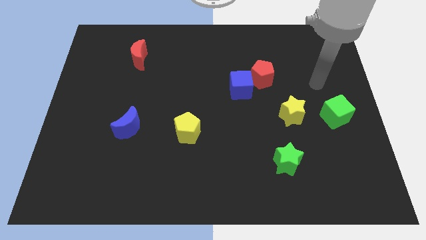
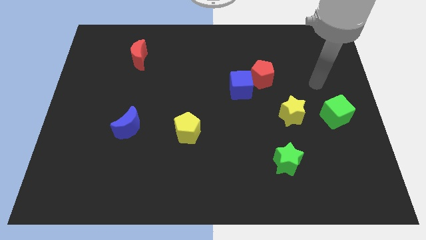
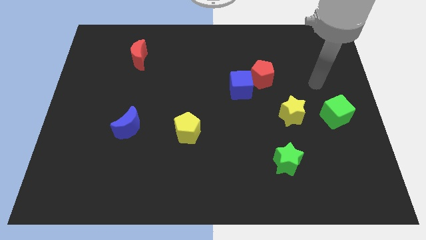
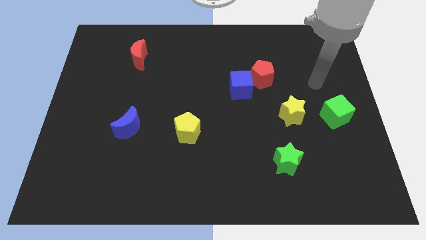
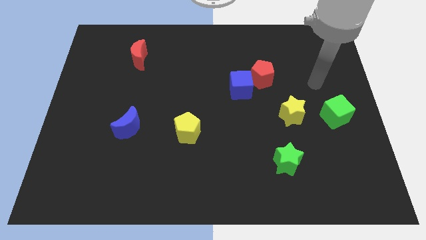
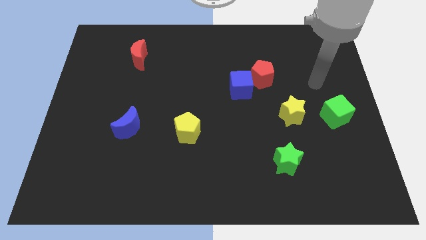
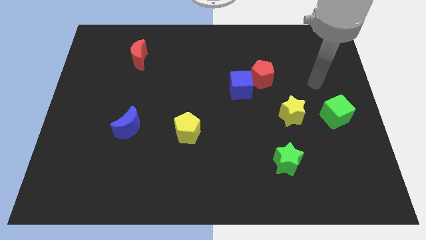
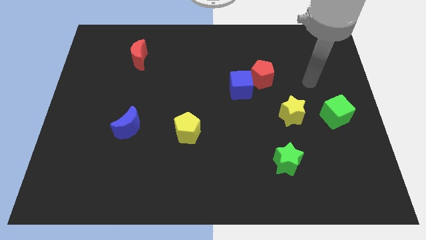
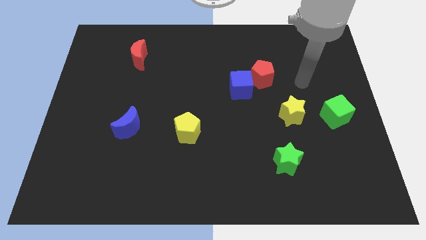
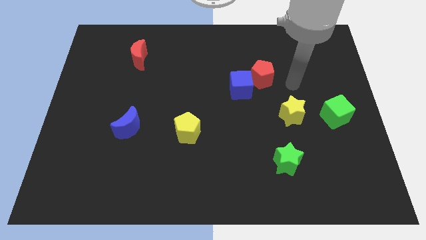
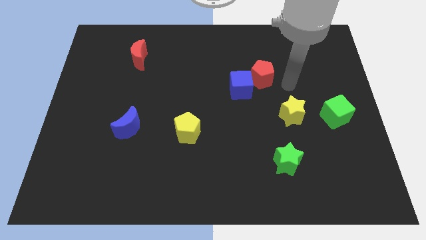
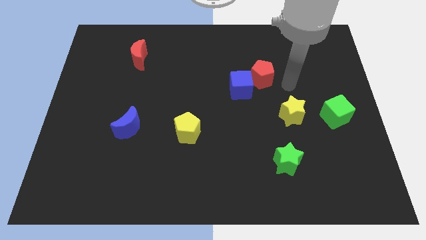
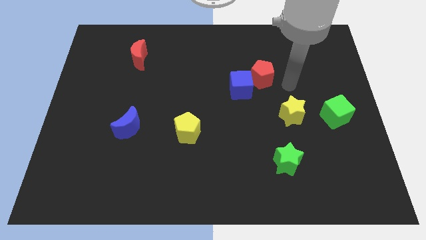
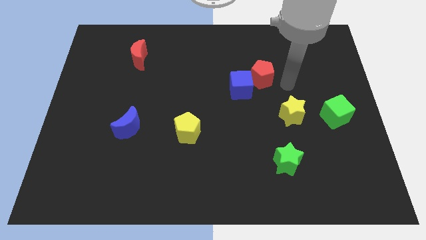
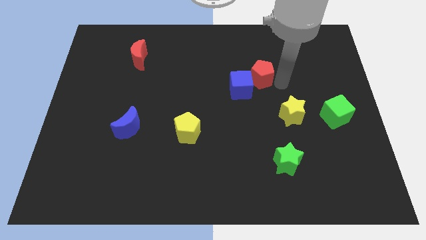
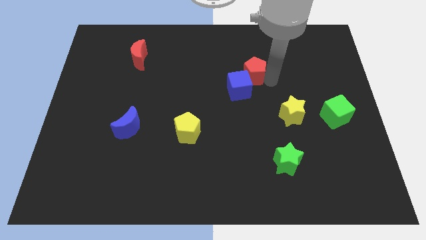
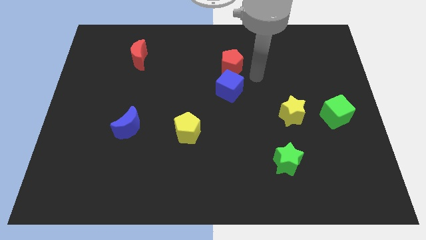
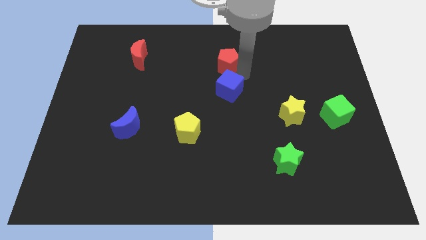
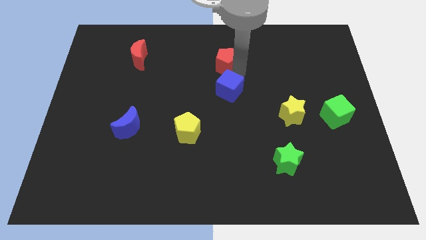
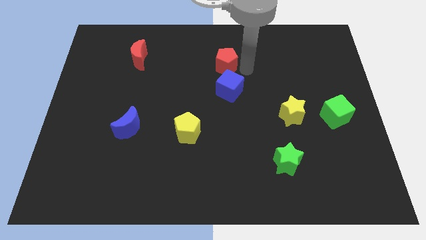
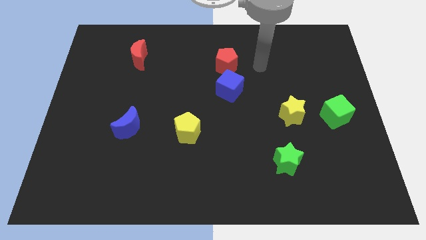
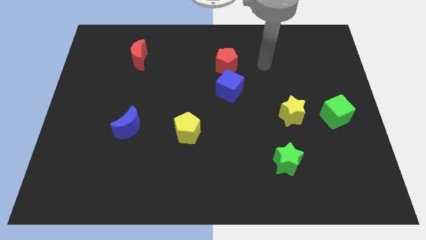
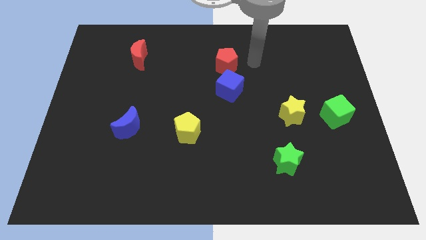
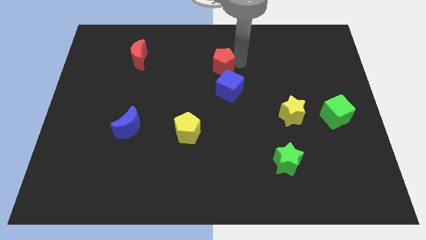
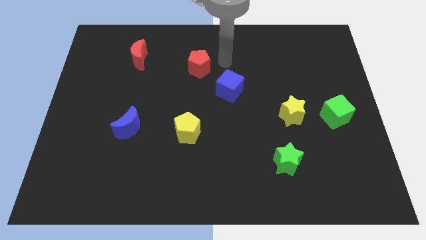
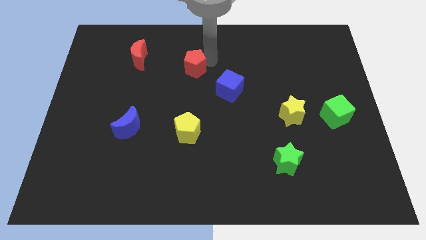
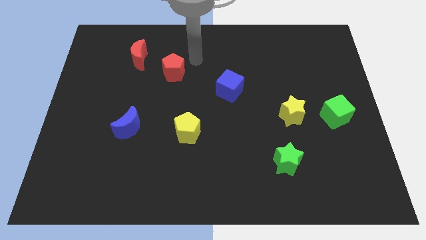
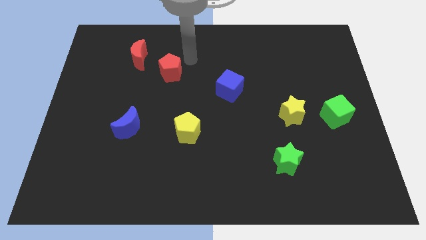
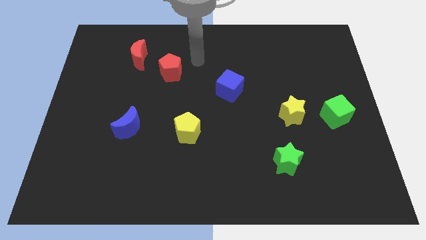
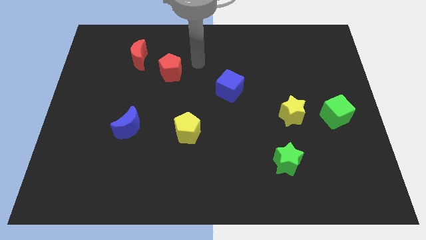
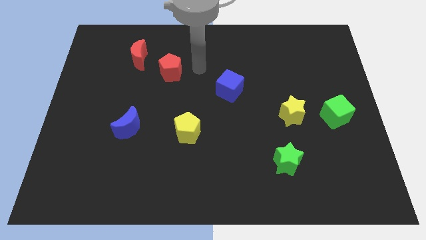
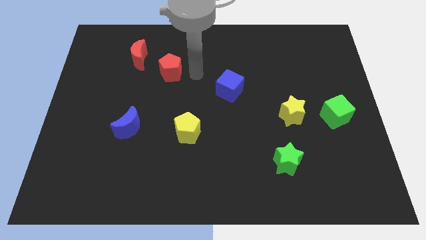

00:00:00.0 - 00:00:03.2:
push the red pentagon towards the red moon

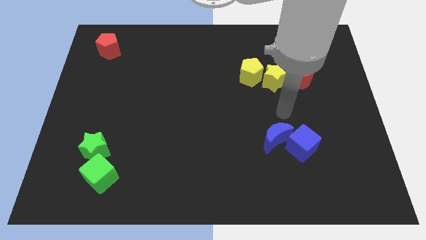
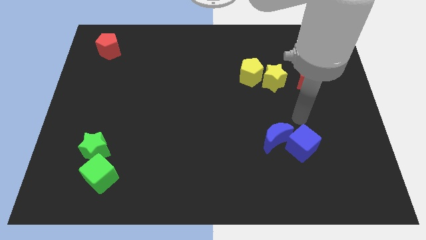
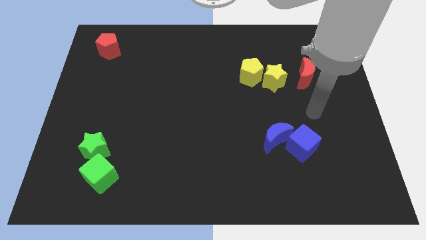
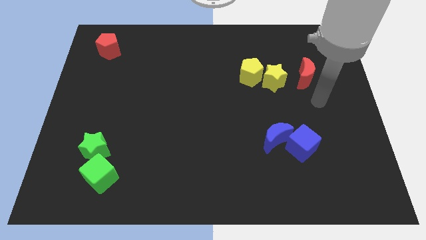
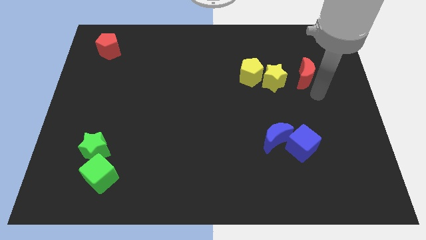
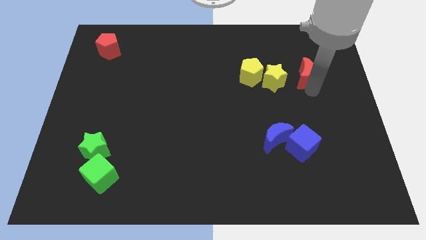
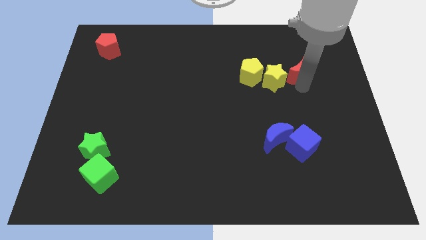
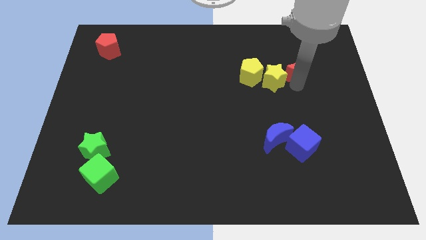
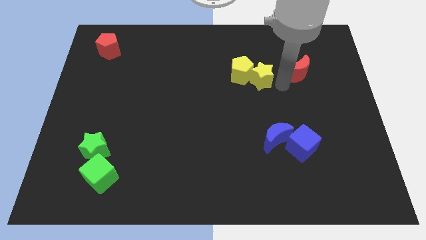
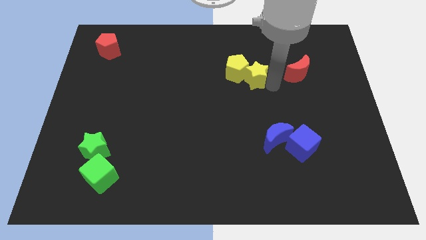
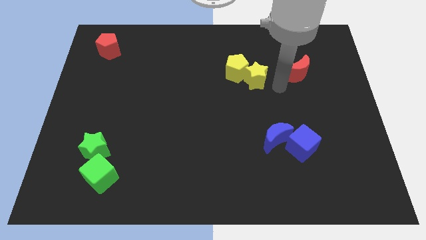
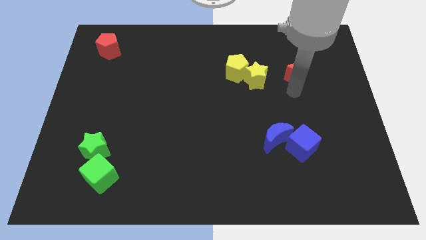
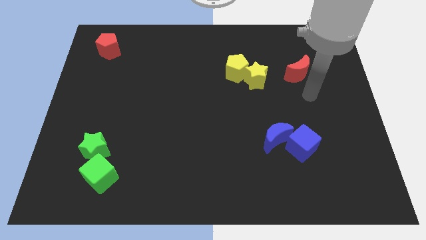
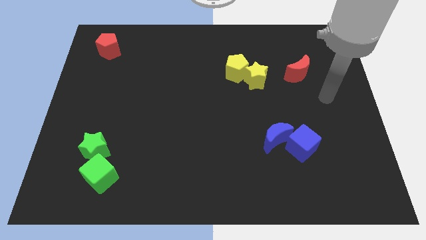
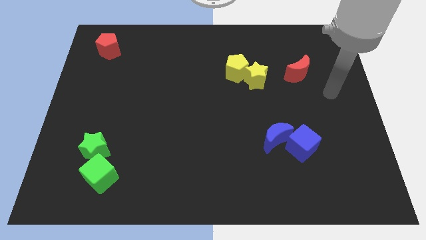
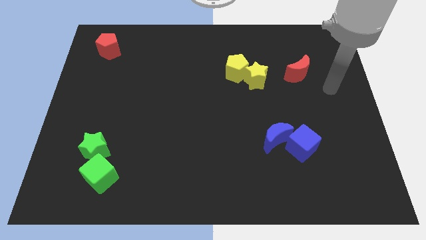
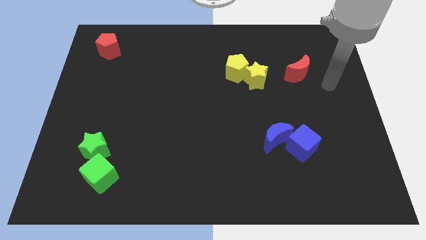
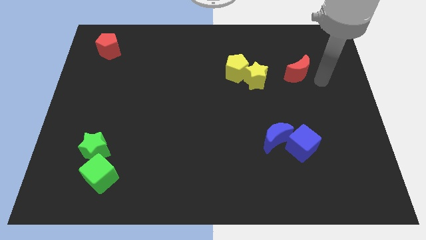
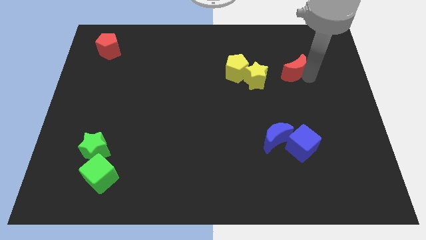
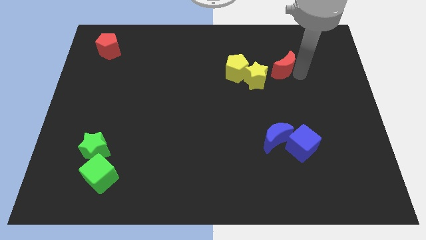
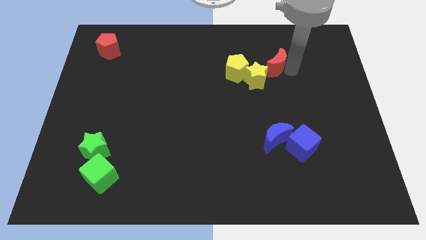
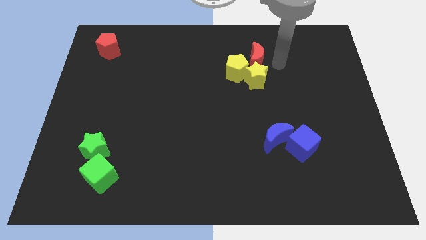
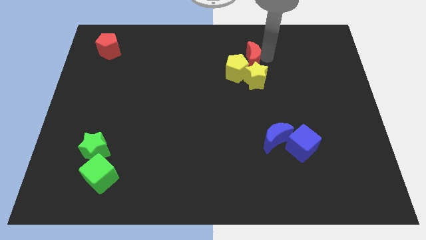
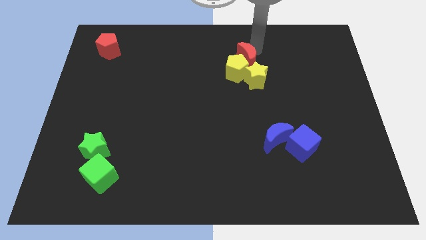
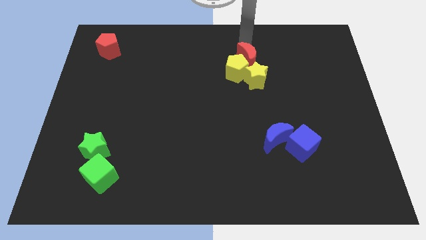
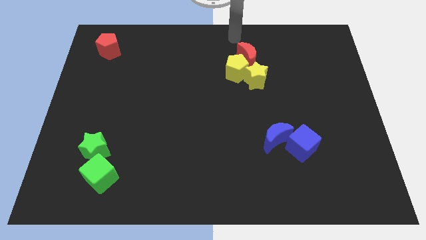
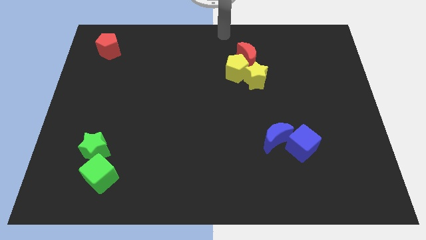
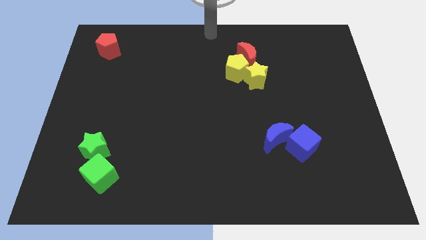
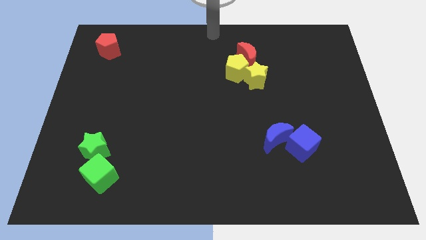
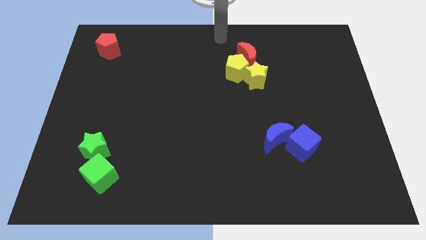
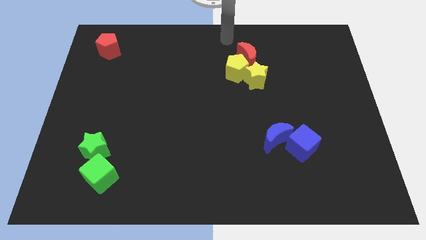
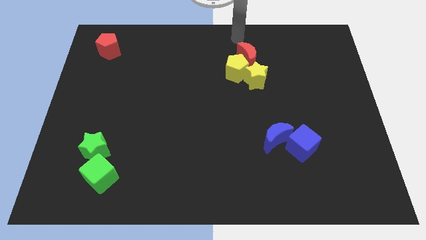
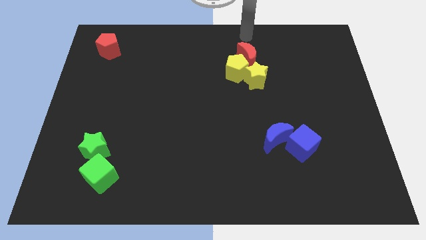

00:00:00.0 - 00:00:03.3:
move yellow blocks and the red crescent towards the top center

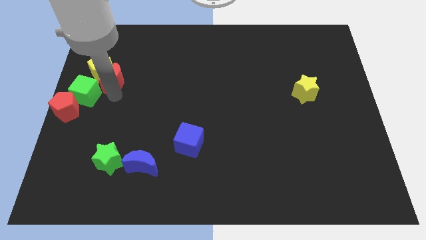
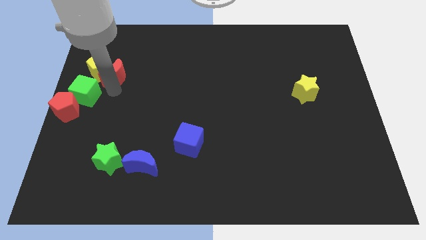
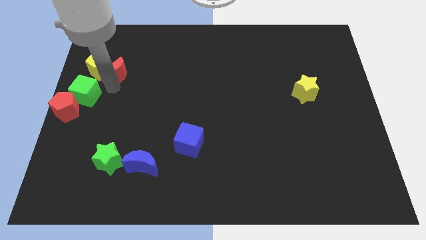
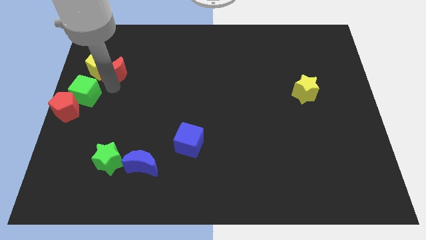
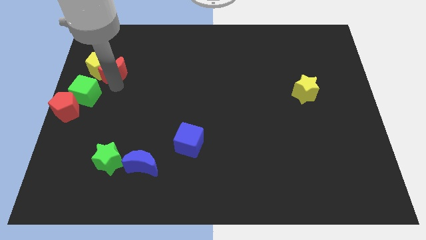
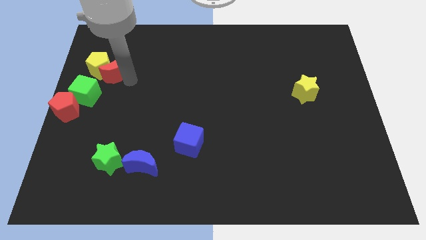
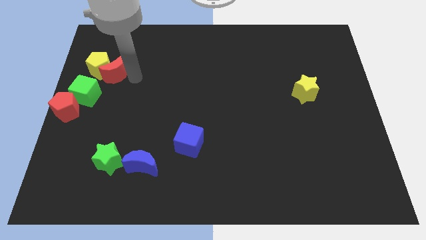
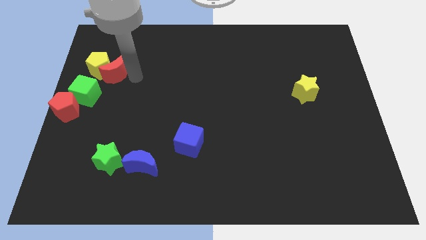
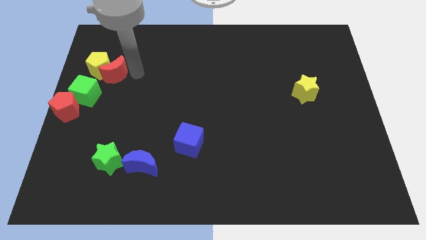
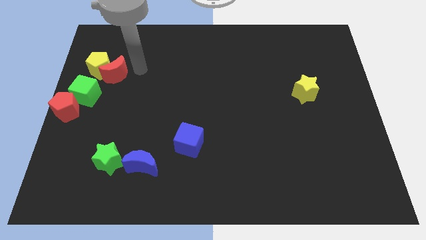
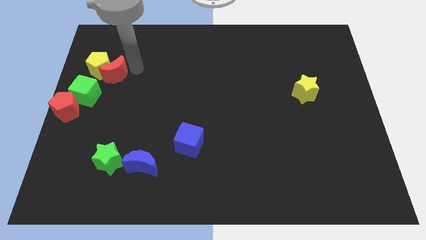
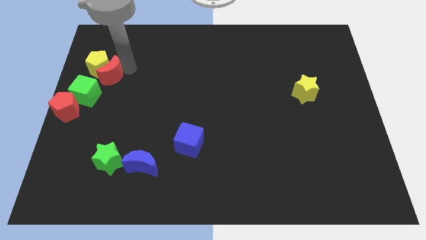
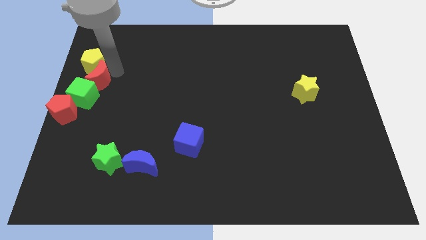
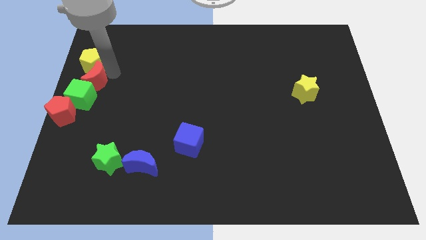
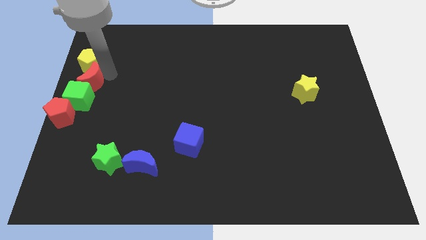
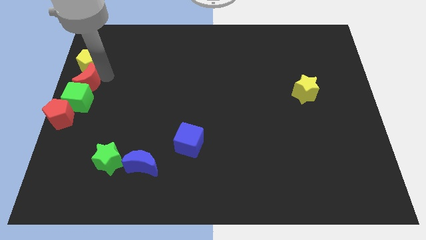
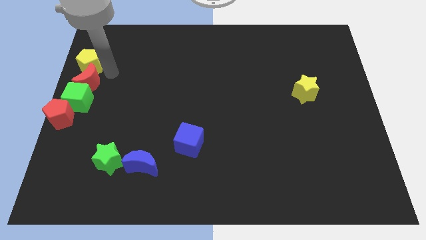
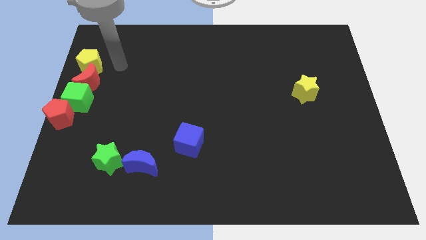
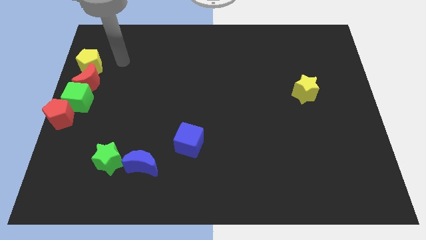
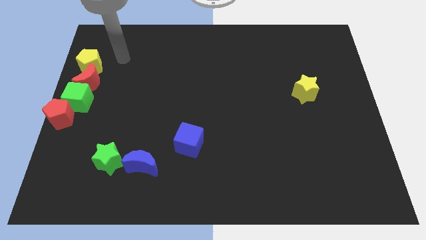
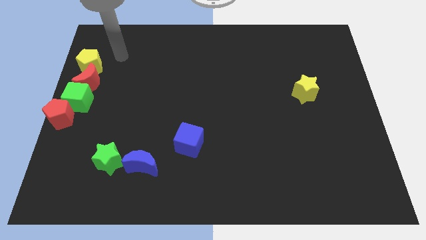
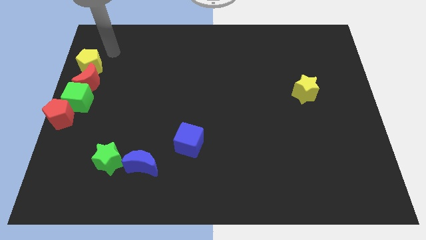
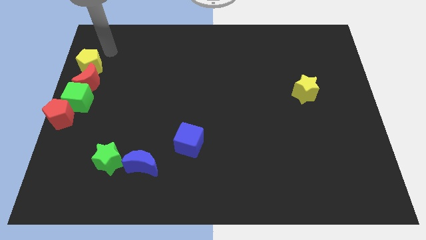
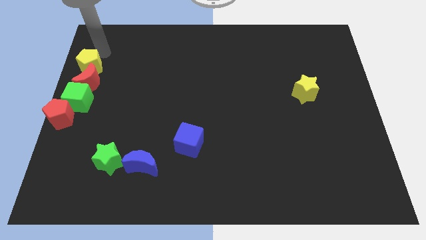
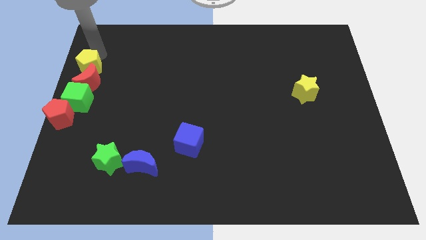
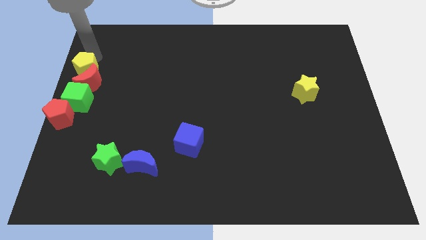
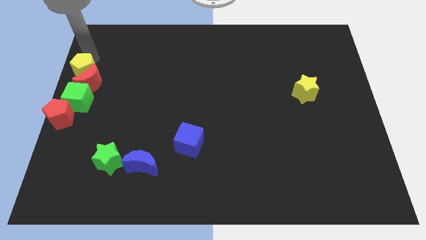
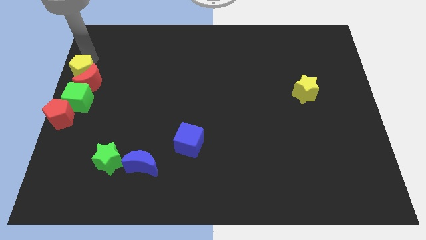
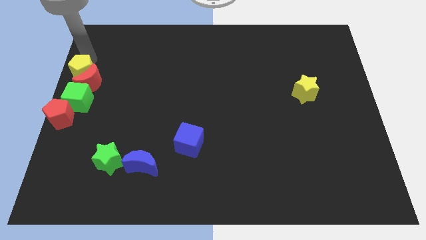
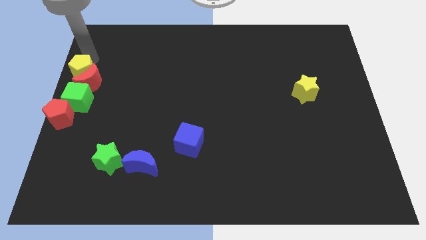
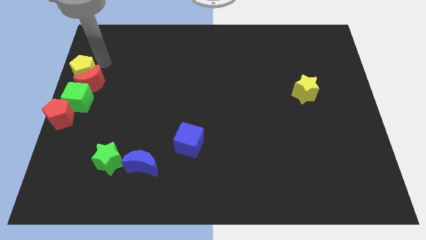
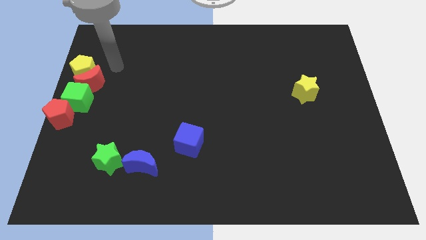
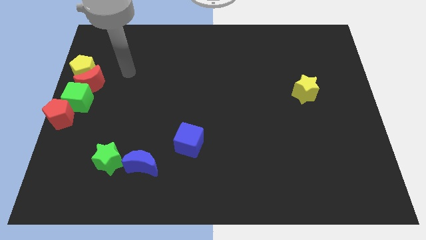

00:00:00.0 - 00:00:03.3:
place the red moon above the green cube
